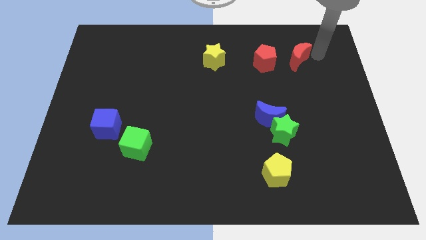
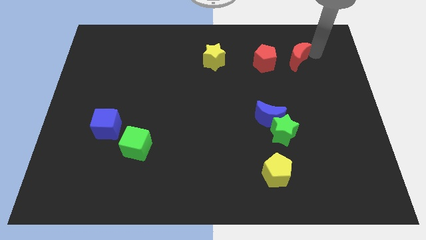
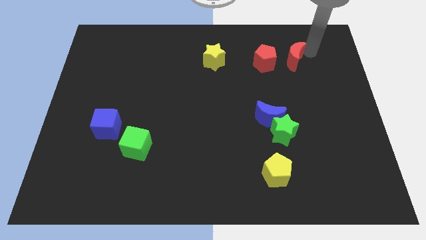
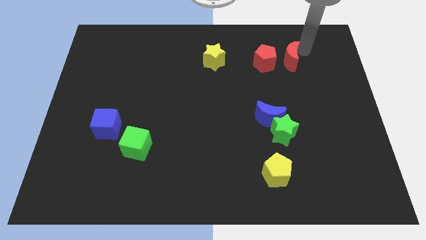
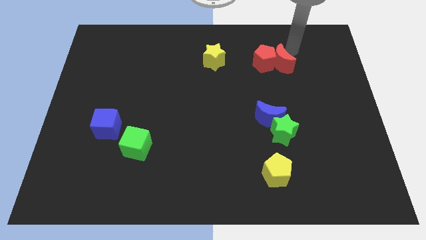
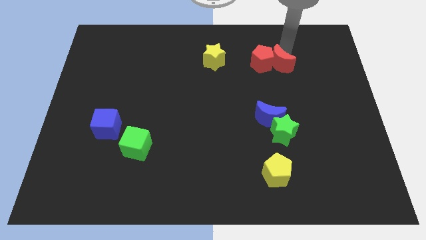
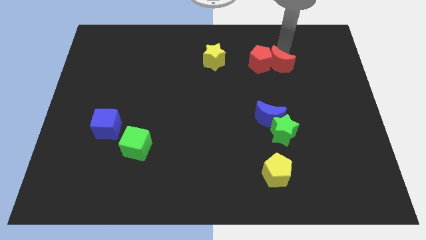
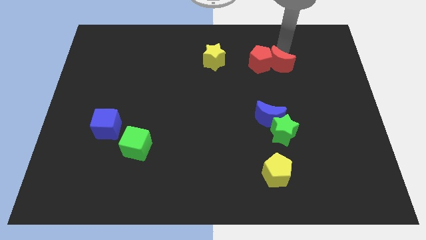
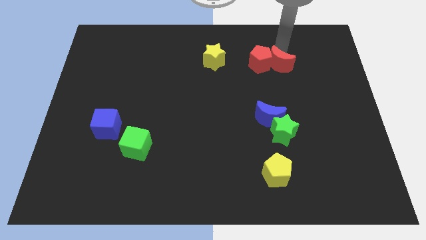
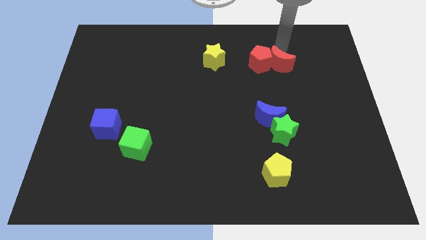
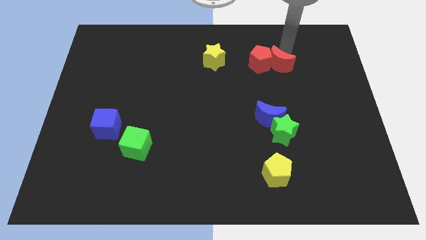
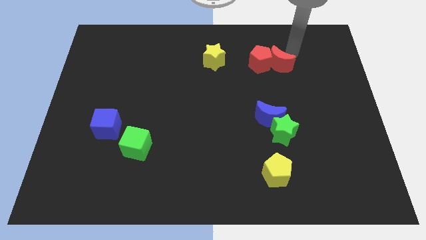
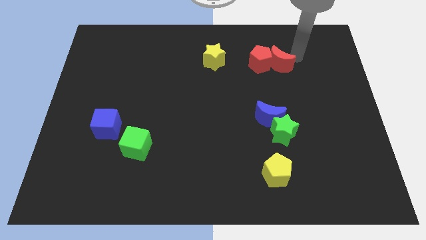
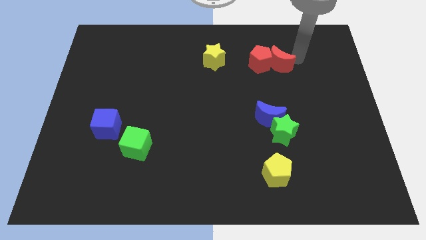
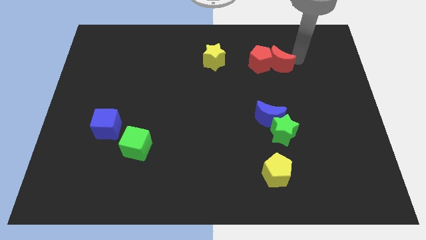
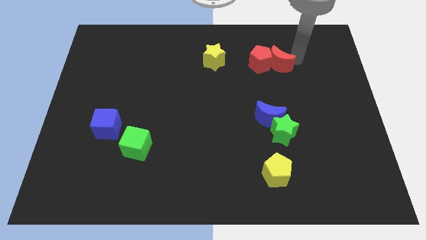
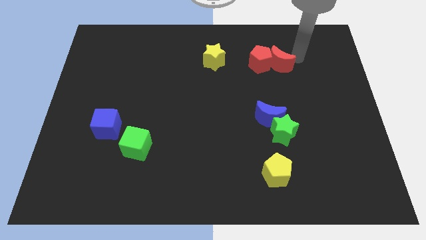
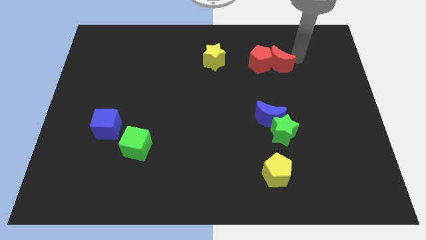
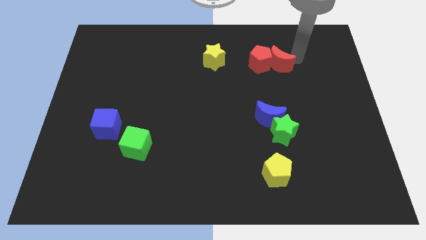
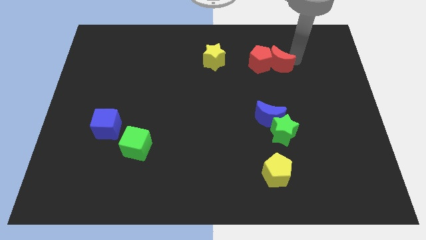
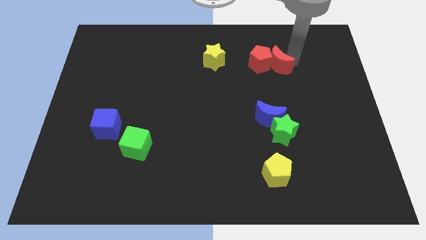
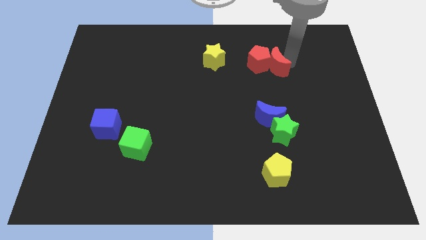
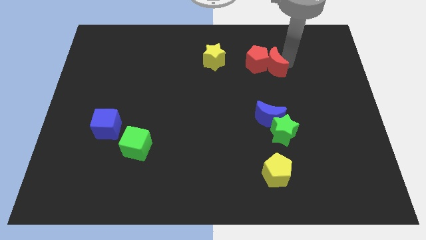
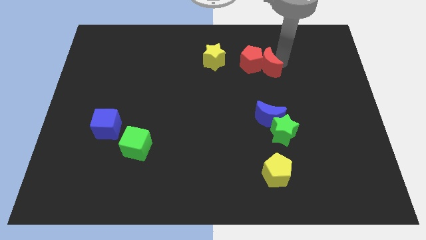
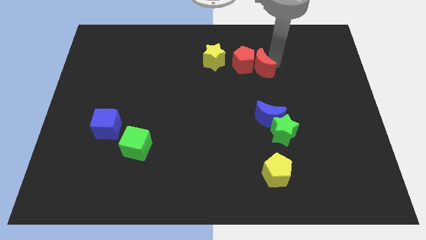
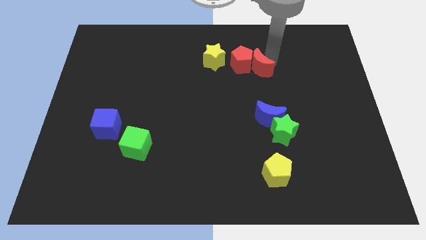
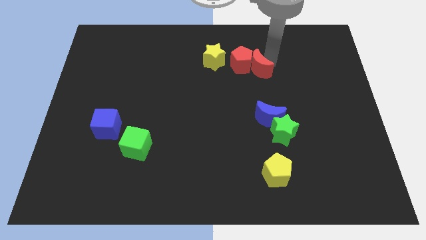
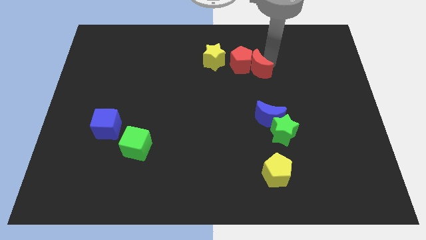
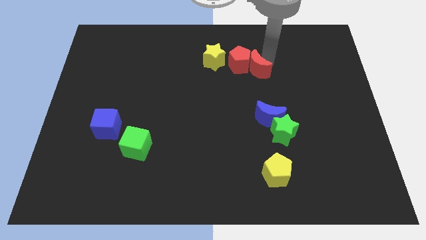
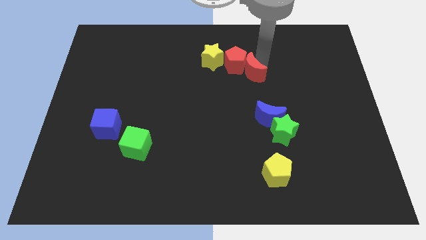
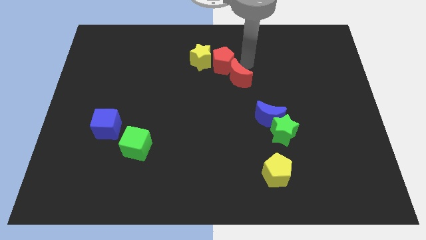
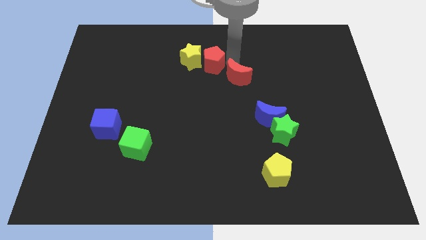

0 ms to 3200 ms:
add the red blocks to the yellow star

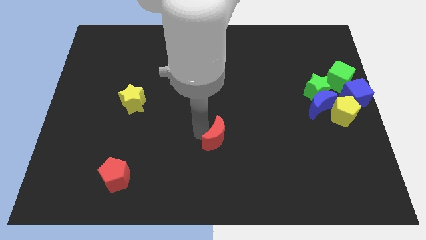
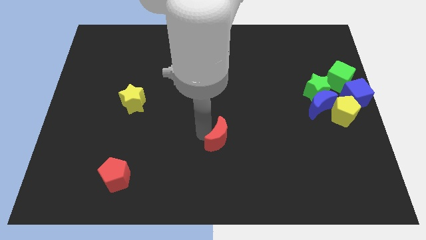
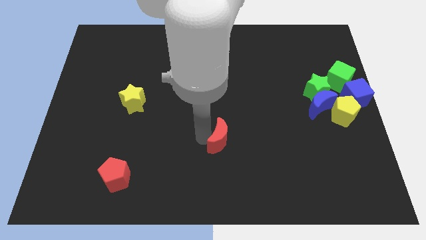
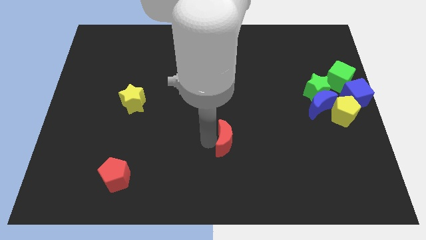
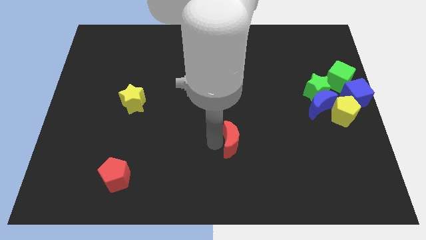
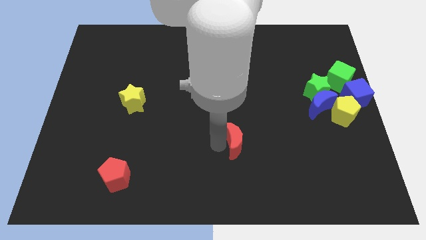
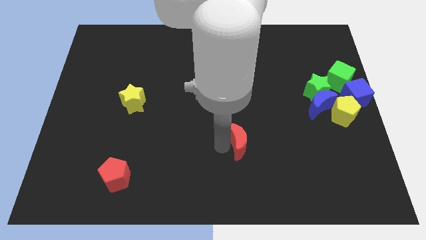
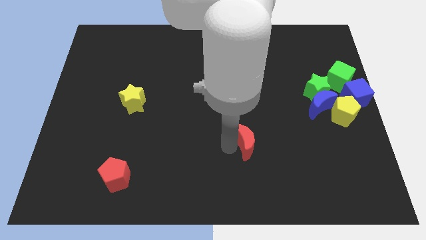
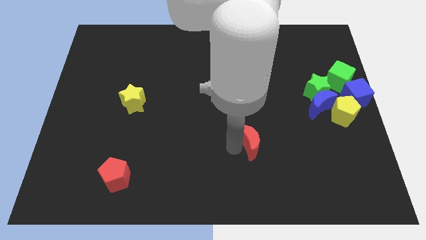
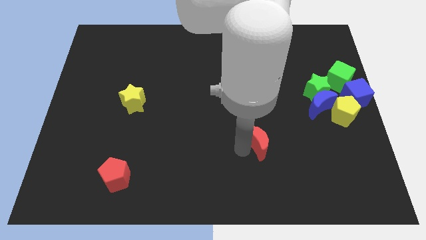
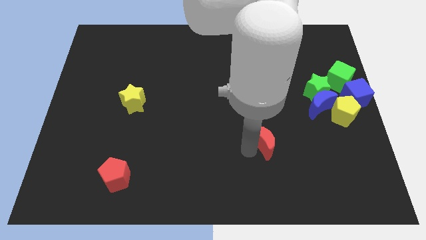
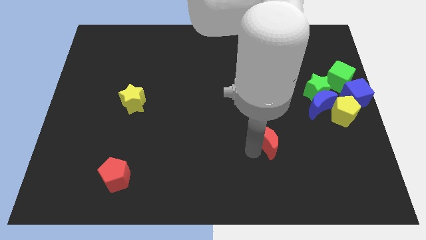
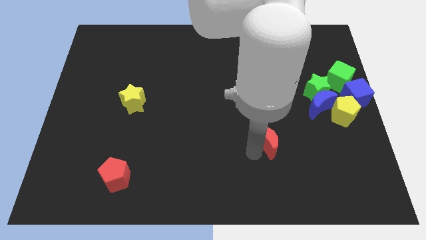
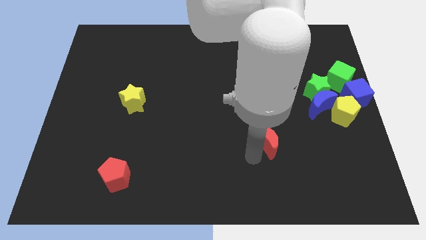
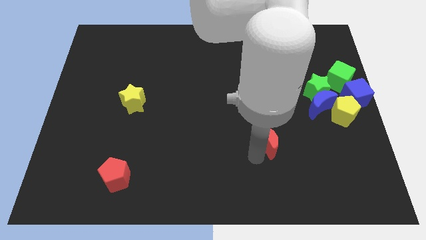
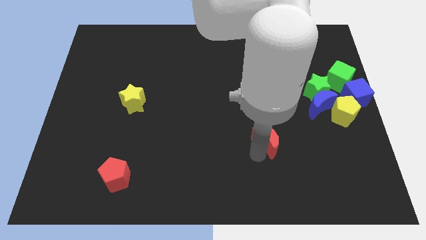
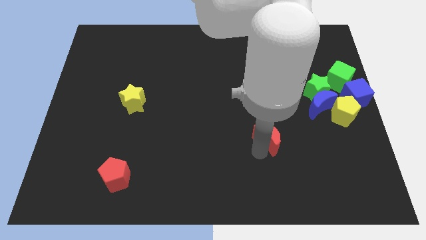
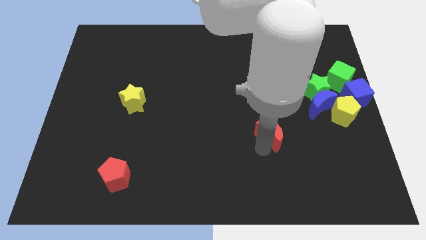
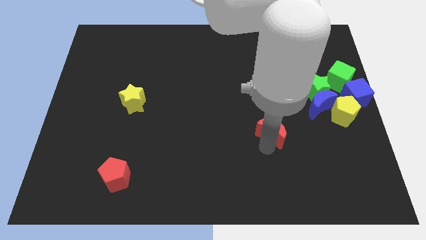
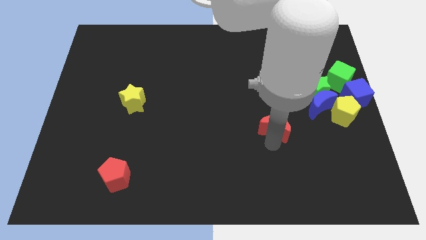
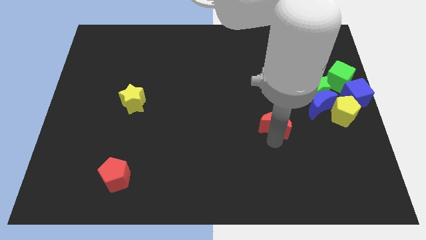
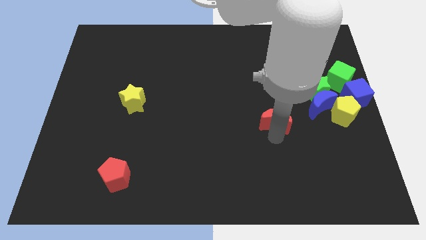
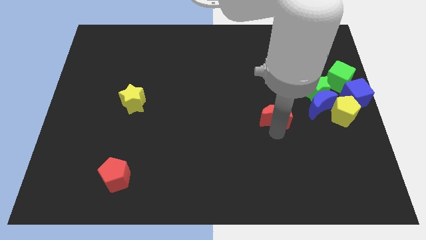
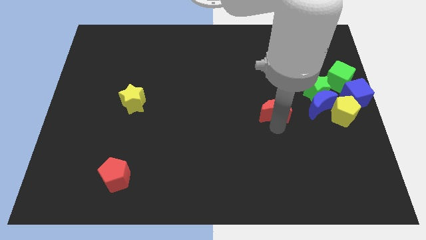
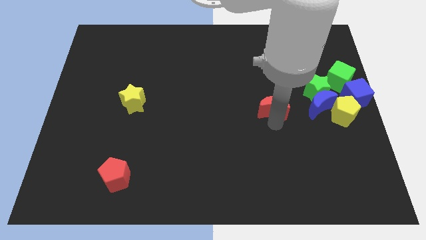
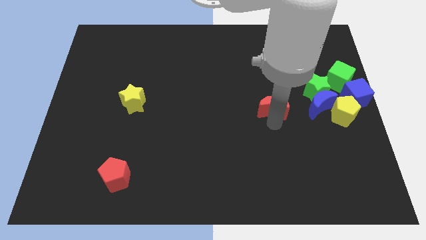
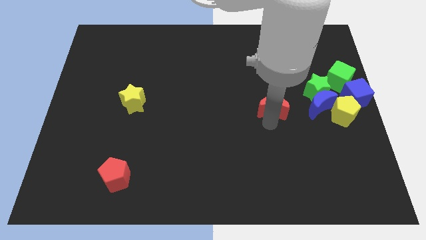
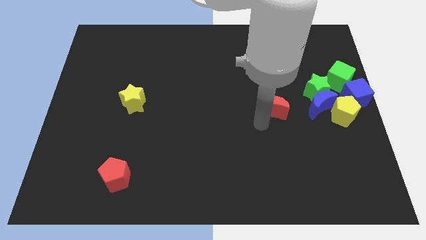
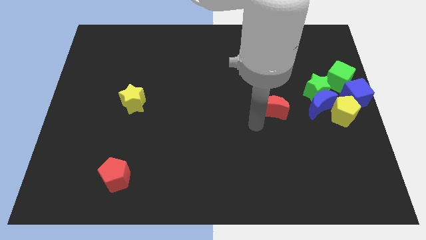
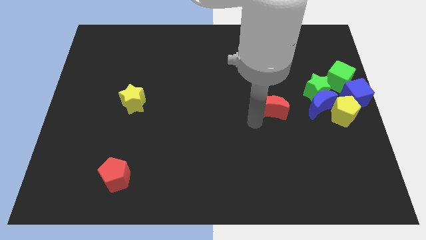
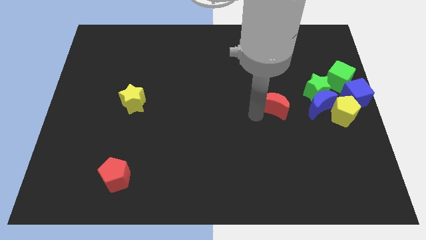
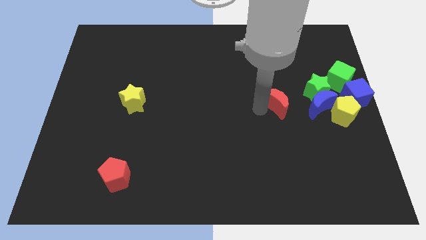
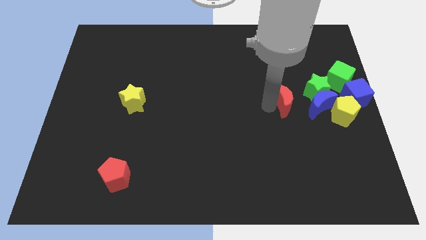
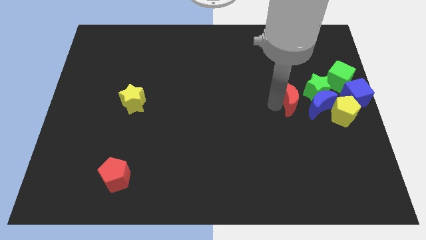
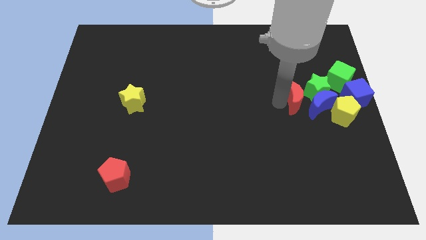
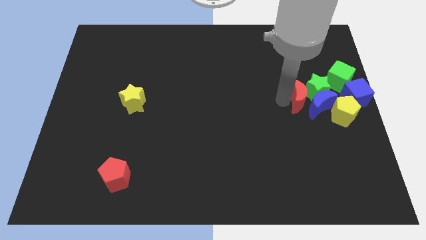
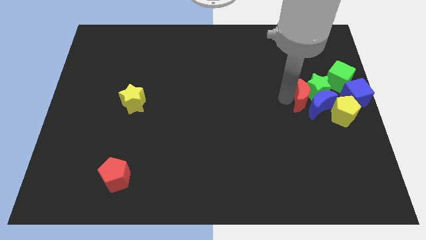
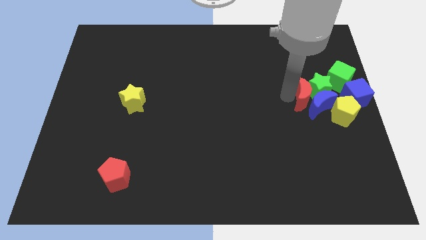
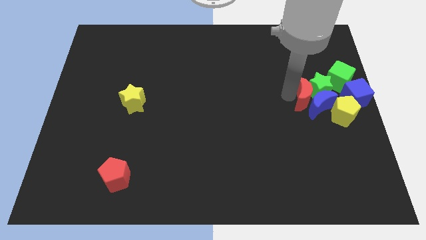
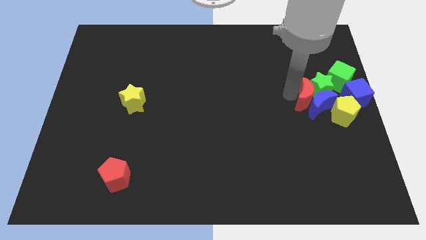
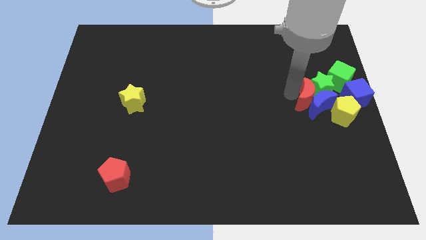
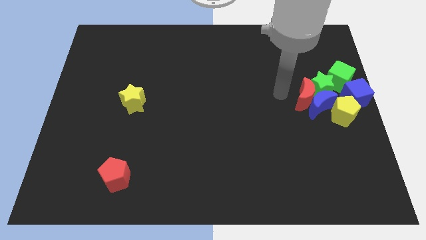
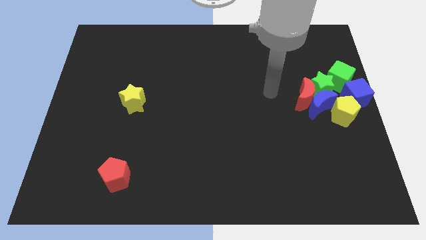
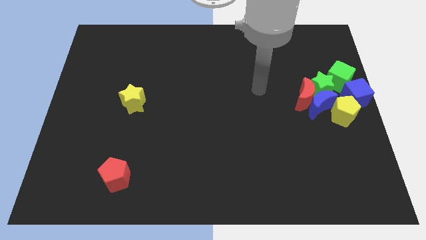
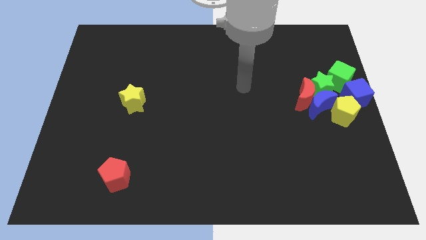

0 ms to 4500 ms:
push the red crescent into the group of blocks

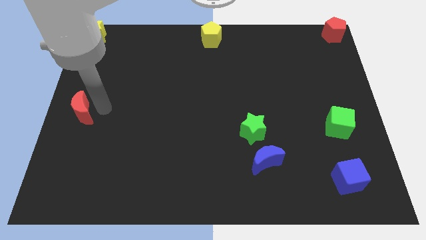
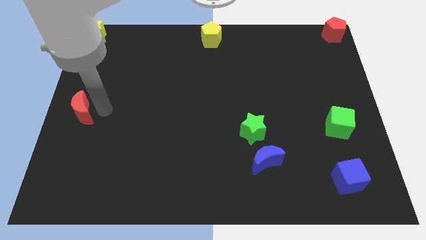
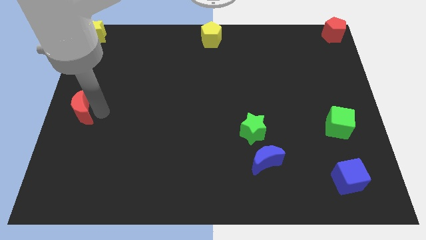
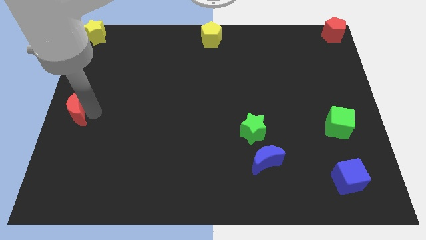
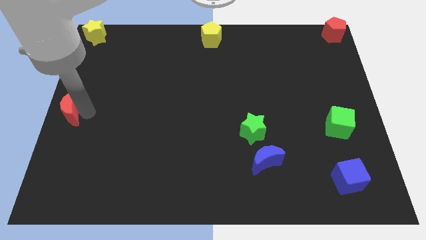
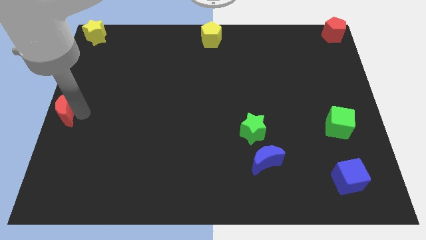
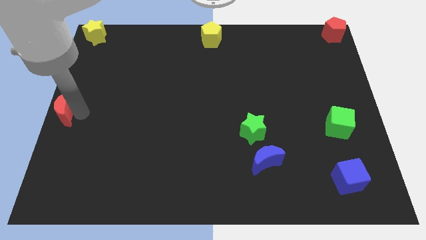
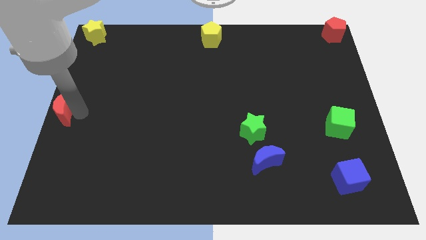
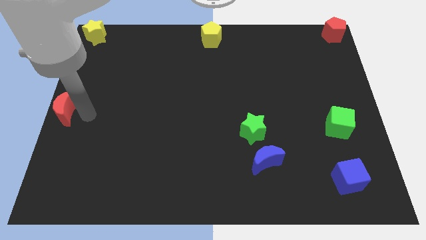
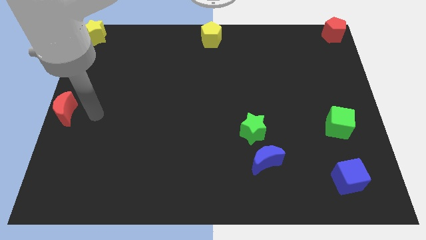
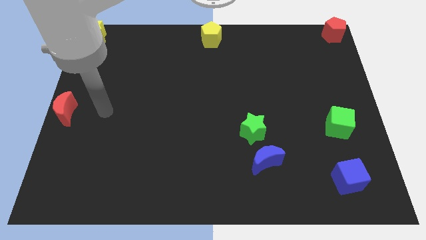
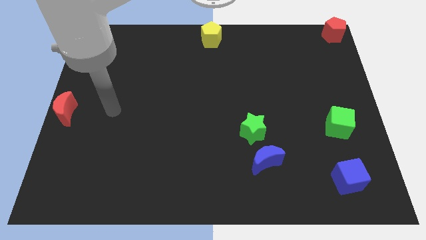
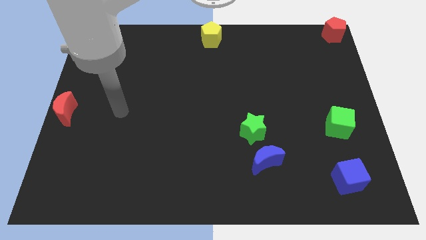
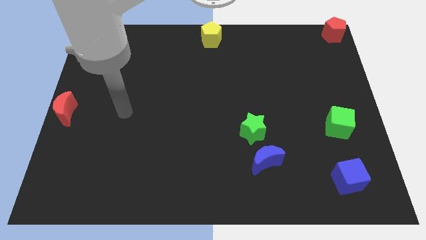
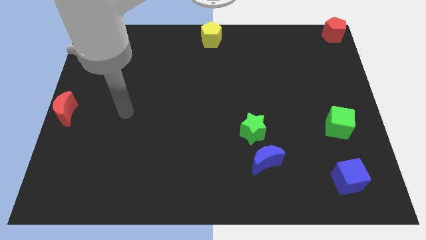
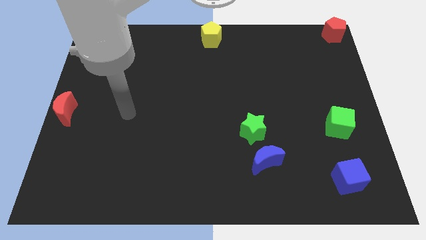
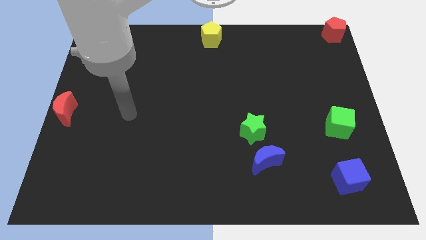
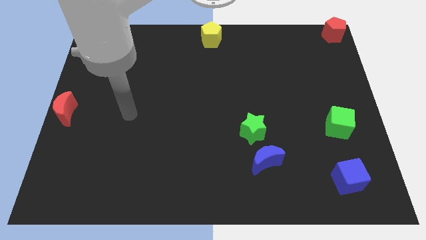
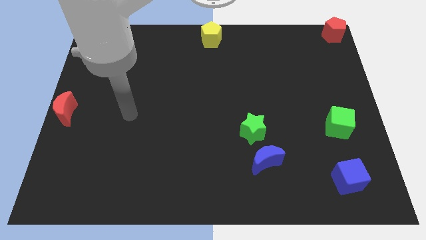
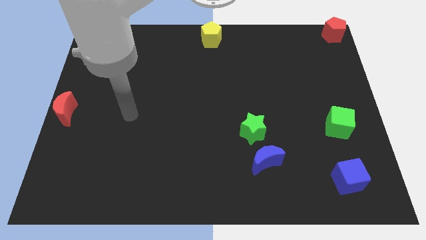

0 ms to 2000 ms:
push the red crescent towards the left center of the board
